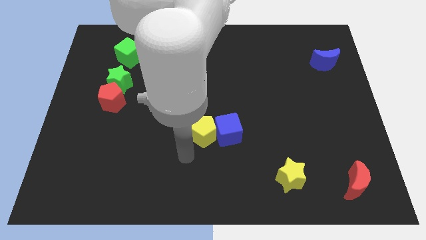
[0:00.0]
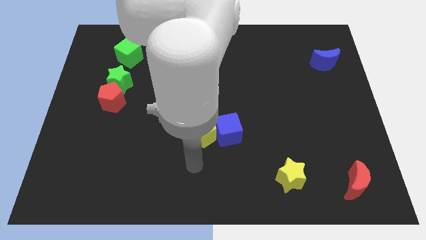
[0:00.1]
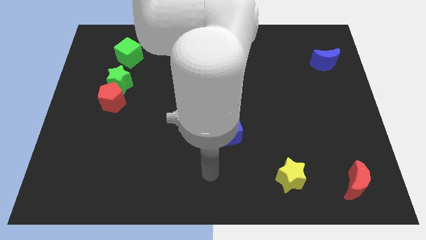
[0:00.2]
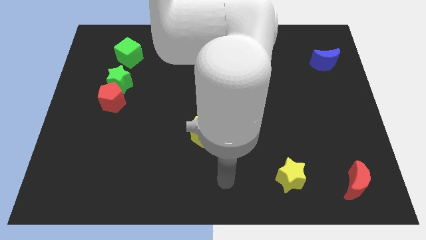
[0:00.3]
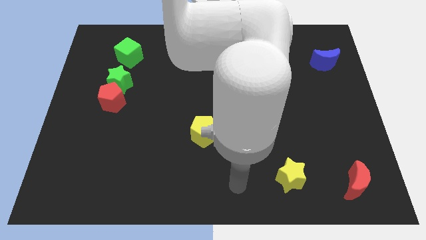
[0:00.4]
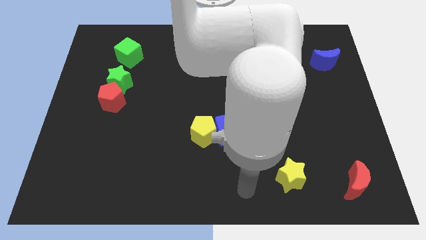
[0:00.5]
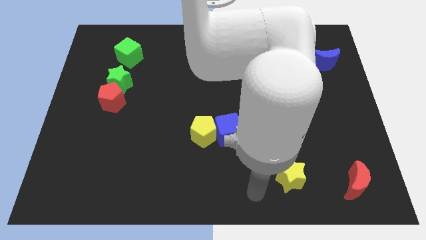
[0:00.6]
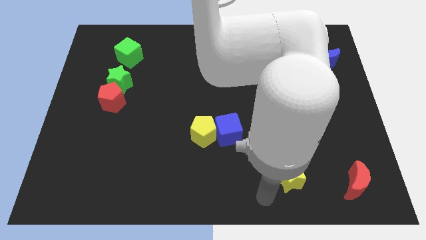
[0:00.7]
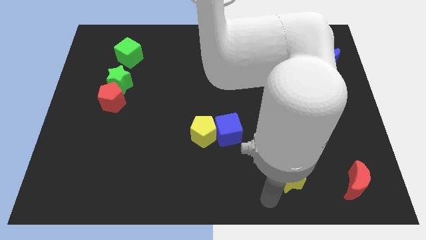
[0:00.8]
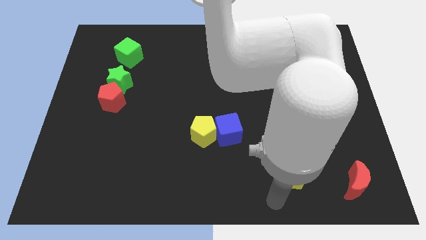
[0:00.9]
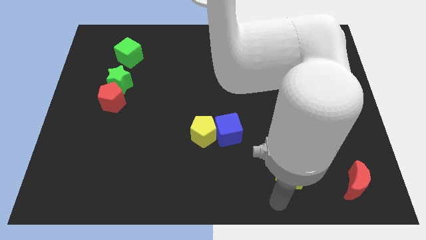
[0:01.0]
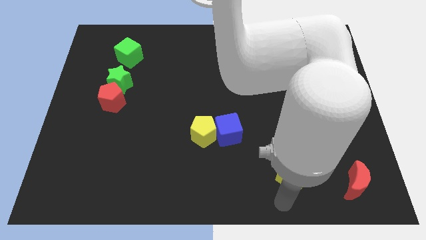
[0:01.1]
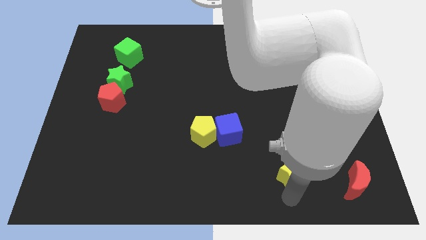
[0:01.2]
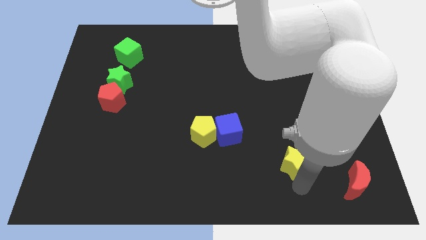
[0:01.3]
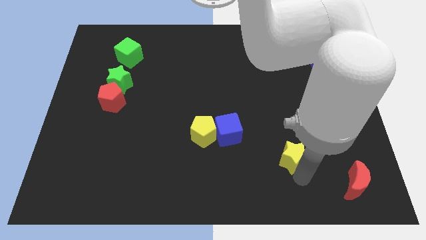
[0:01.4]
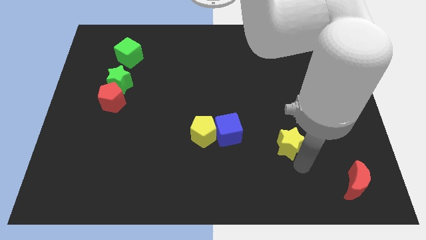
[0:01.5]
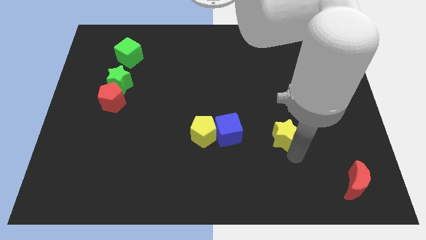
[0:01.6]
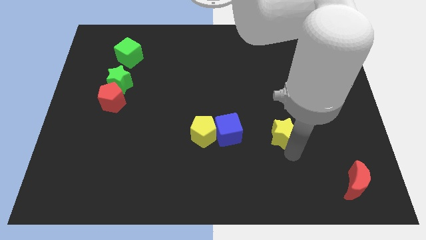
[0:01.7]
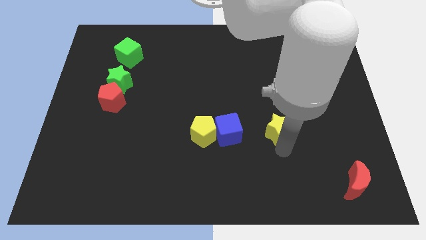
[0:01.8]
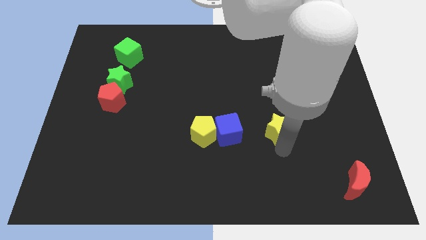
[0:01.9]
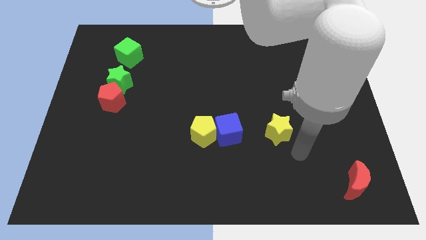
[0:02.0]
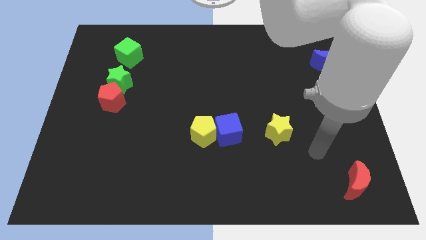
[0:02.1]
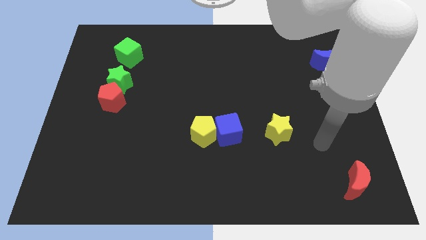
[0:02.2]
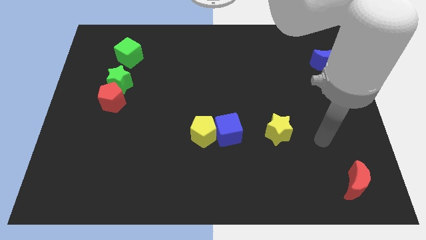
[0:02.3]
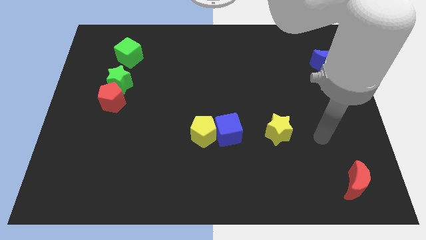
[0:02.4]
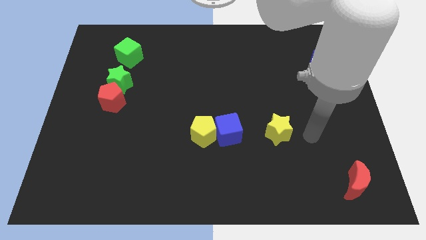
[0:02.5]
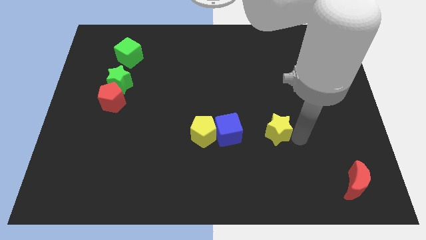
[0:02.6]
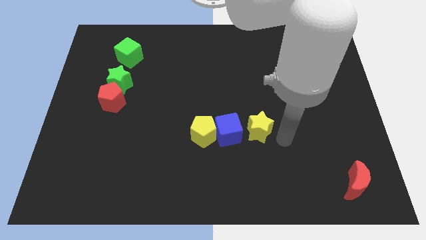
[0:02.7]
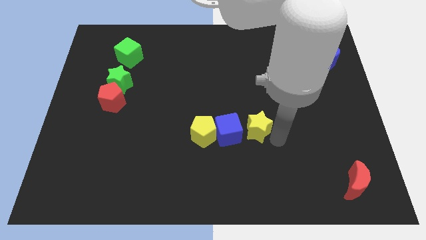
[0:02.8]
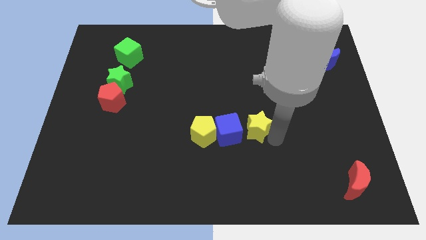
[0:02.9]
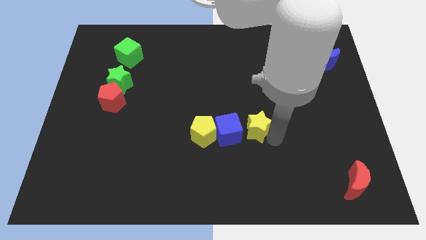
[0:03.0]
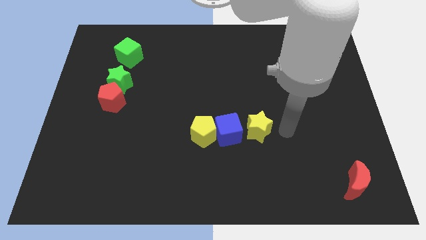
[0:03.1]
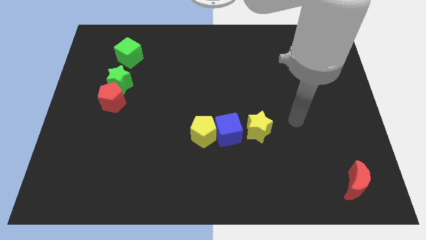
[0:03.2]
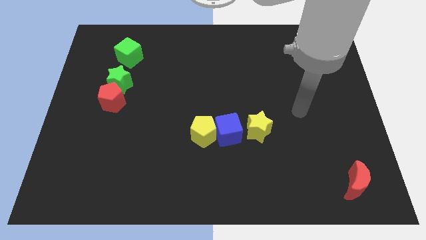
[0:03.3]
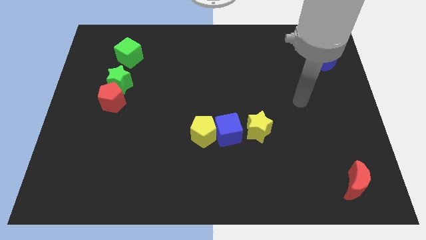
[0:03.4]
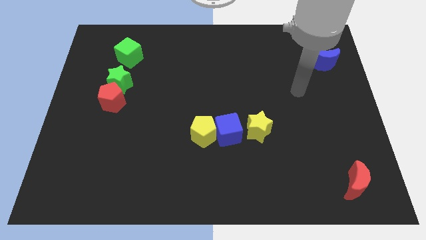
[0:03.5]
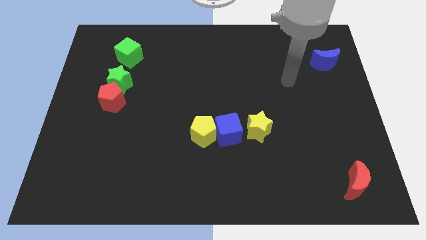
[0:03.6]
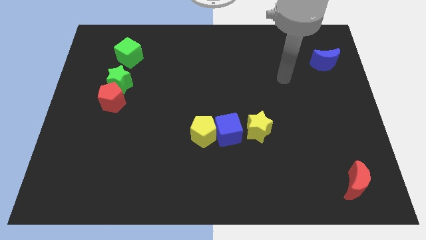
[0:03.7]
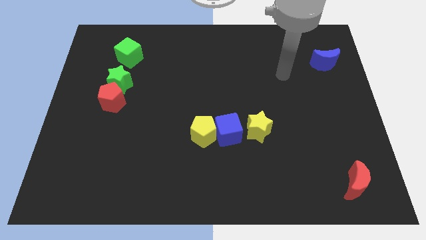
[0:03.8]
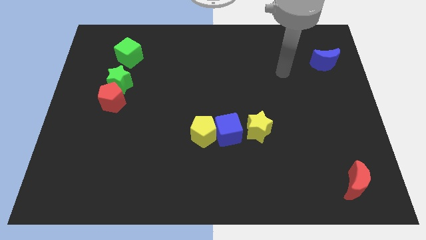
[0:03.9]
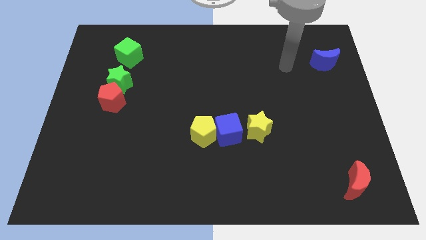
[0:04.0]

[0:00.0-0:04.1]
push the yellow star to the right of the blue cube

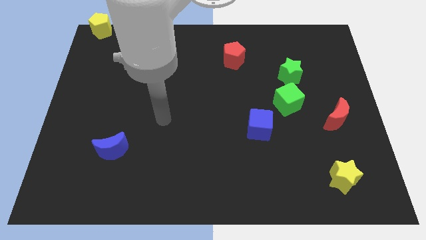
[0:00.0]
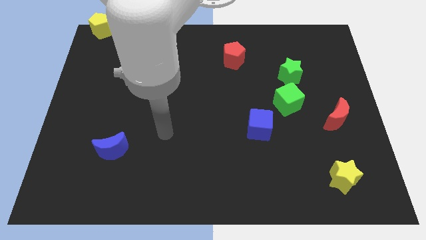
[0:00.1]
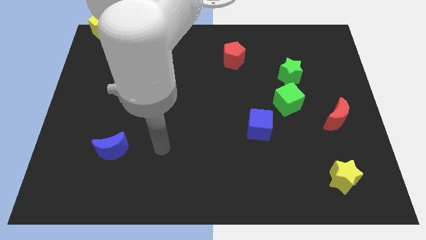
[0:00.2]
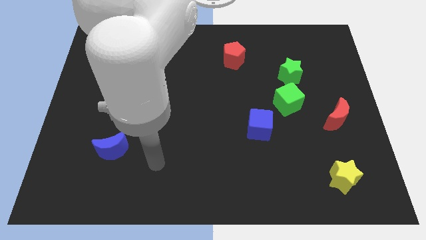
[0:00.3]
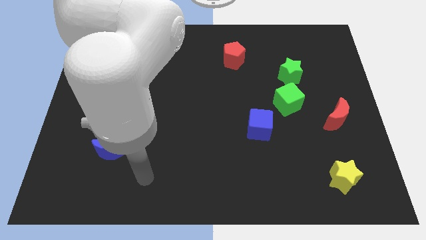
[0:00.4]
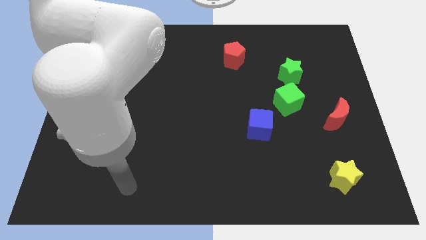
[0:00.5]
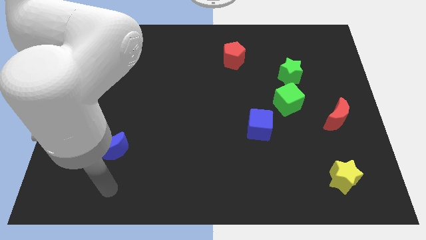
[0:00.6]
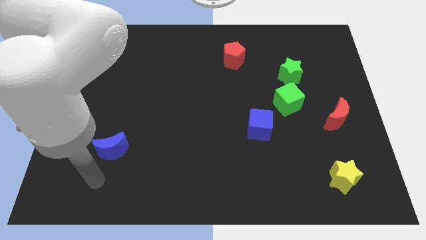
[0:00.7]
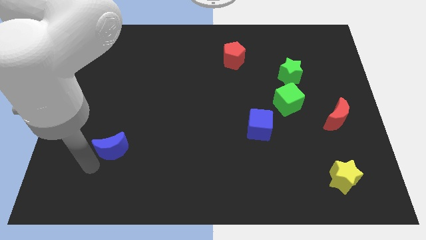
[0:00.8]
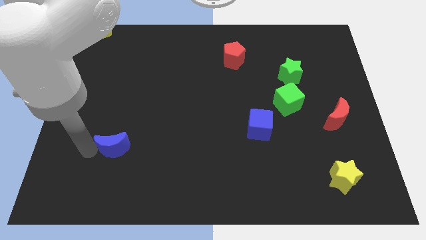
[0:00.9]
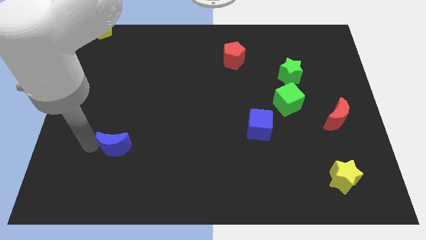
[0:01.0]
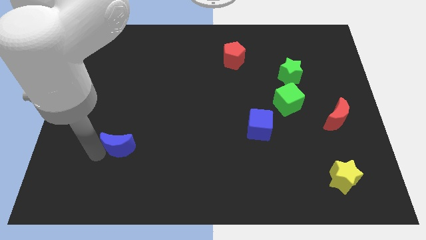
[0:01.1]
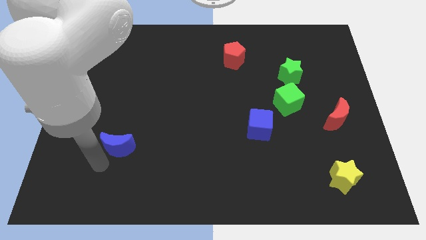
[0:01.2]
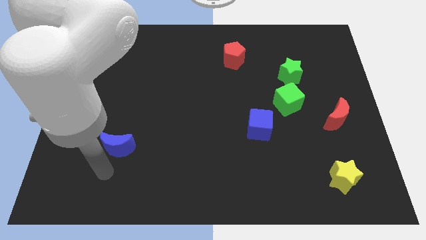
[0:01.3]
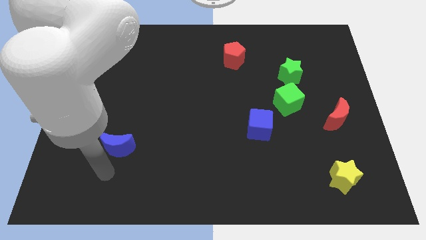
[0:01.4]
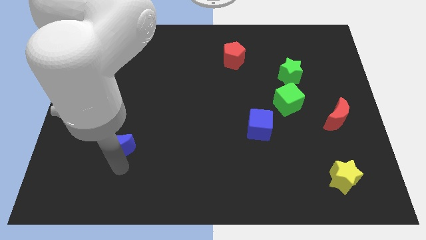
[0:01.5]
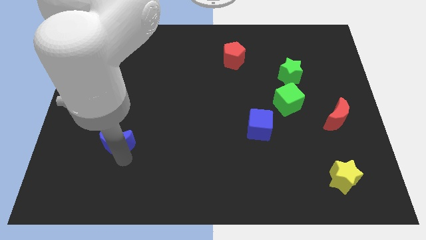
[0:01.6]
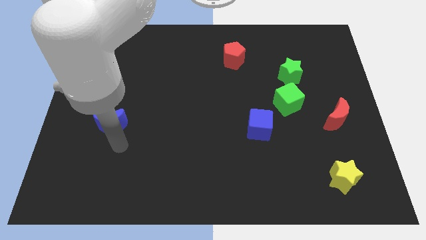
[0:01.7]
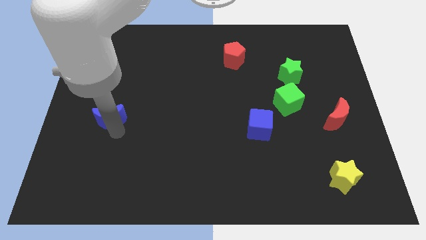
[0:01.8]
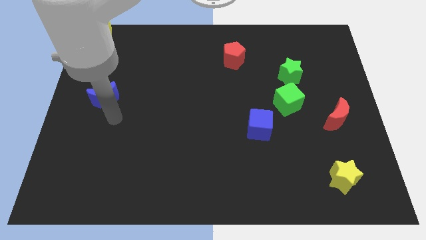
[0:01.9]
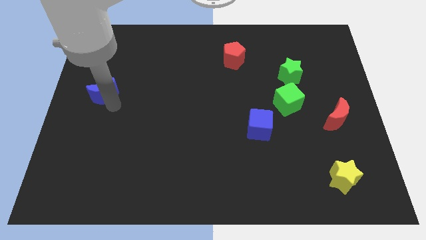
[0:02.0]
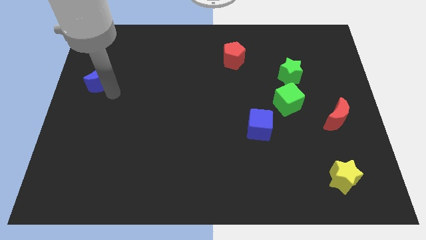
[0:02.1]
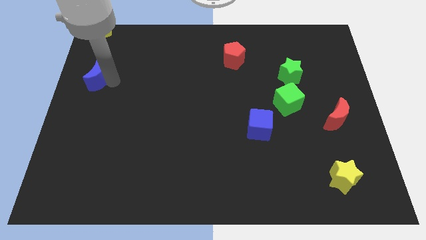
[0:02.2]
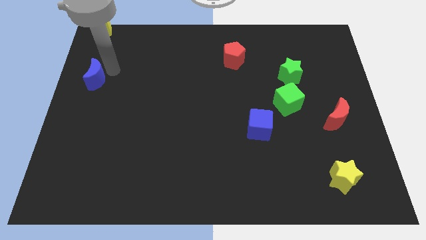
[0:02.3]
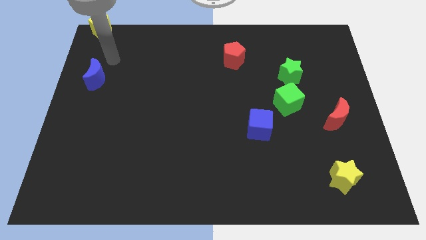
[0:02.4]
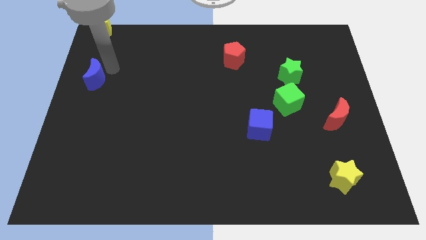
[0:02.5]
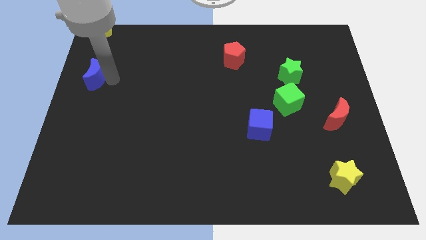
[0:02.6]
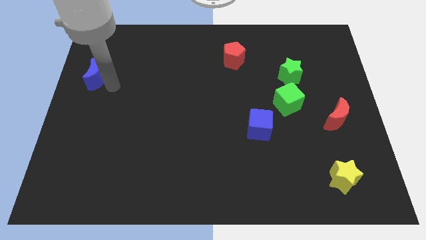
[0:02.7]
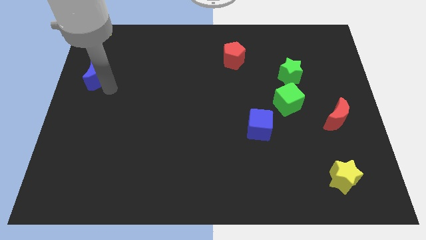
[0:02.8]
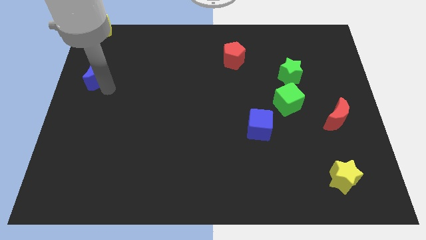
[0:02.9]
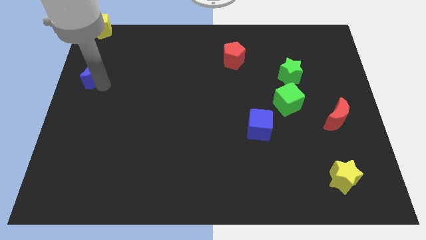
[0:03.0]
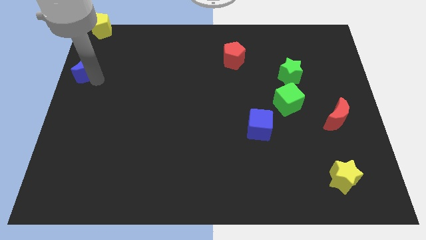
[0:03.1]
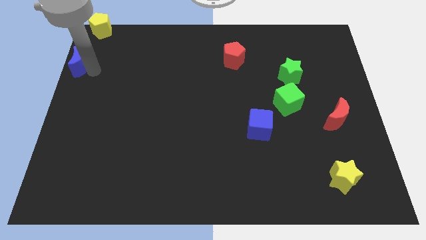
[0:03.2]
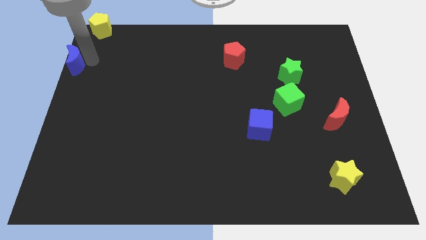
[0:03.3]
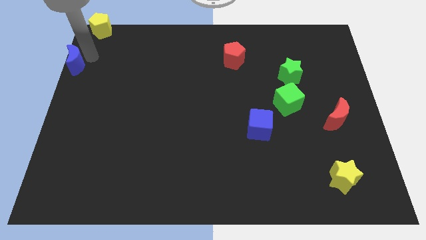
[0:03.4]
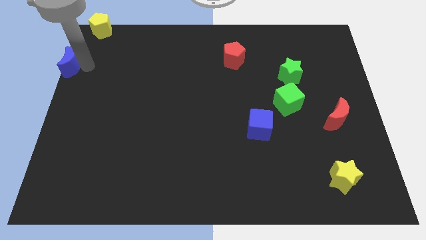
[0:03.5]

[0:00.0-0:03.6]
move the blue moon diagonally top left to the blue cube

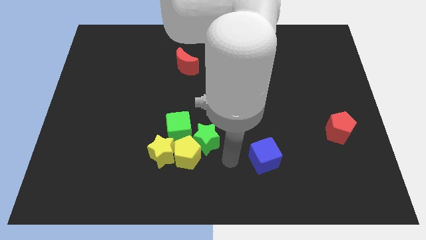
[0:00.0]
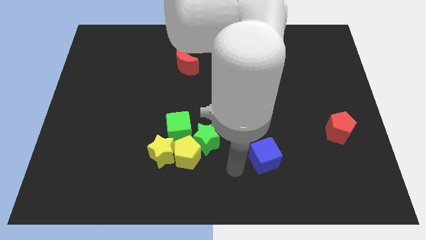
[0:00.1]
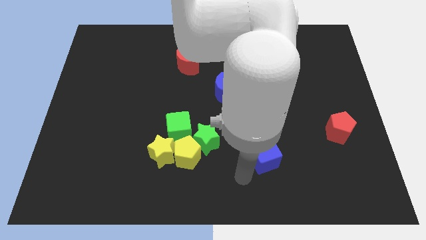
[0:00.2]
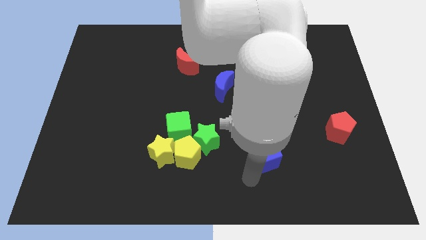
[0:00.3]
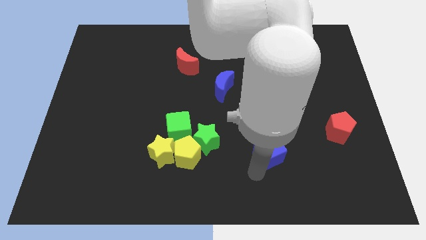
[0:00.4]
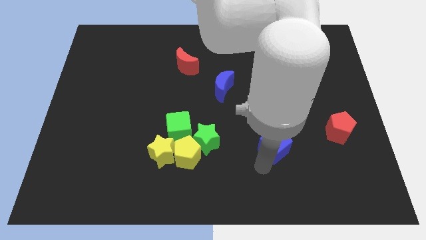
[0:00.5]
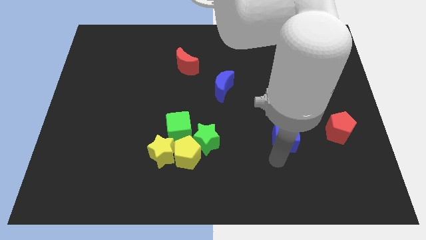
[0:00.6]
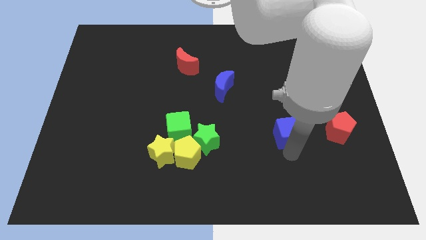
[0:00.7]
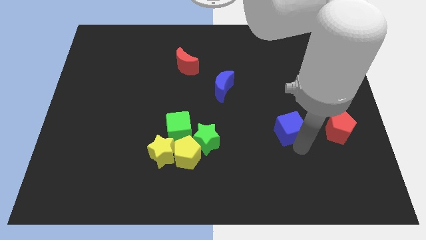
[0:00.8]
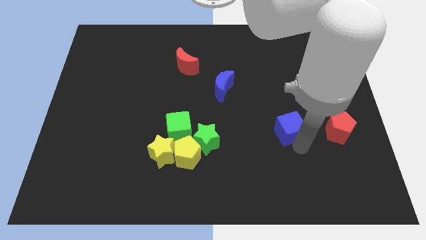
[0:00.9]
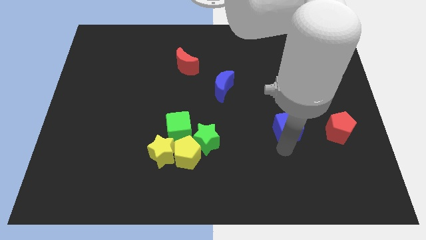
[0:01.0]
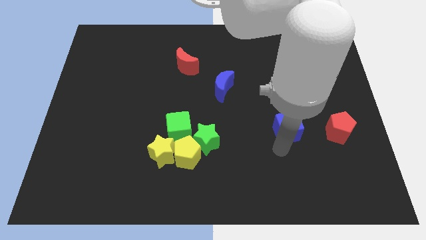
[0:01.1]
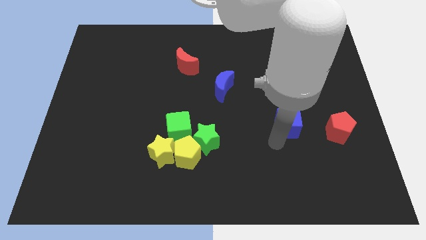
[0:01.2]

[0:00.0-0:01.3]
push the blue cube upwards
